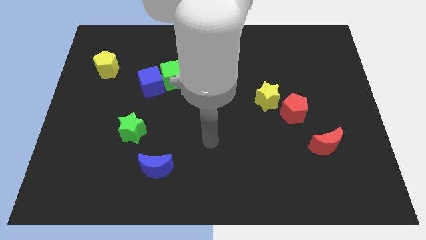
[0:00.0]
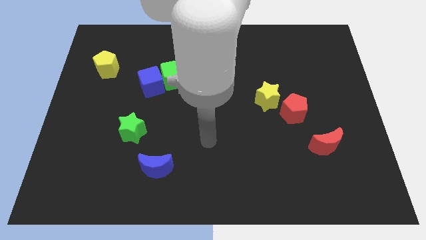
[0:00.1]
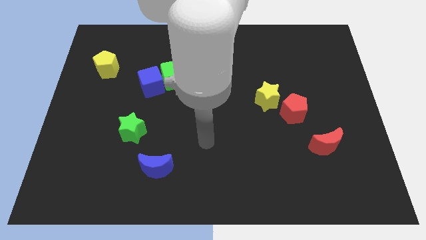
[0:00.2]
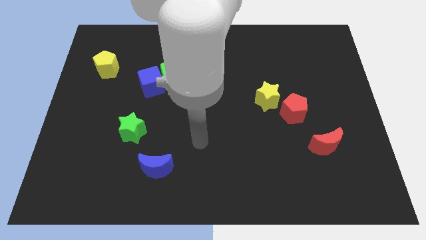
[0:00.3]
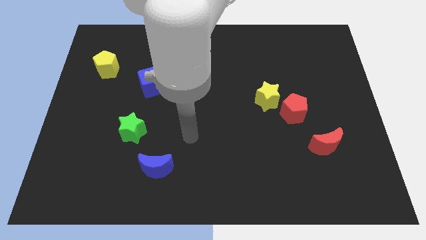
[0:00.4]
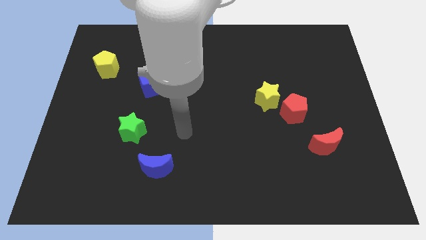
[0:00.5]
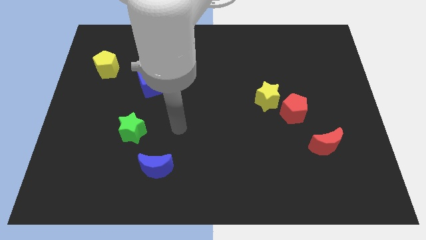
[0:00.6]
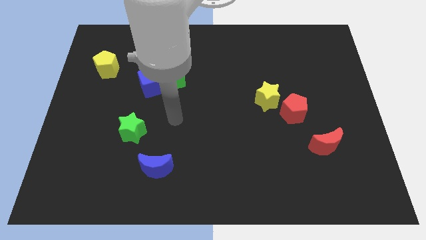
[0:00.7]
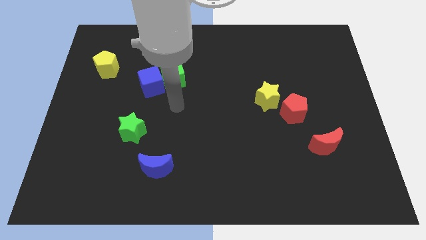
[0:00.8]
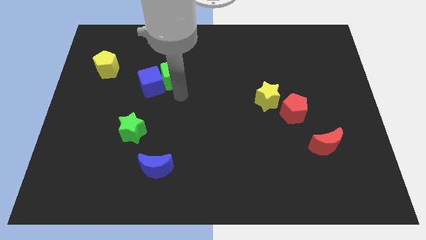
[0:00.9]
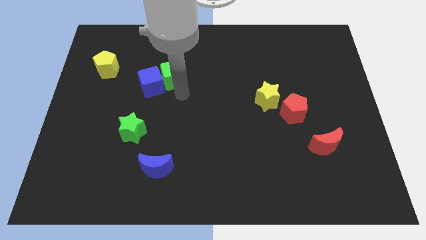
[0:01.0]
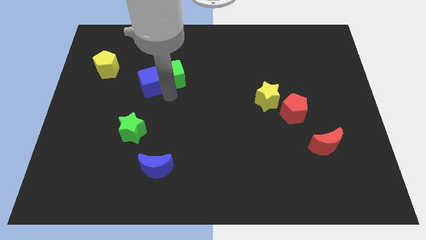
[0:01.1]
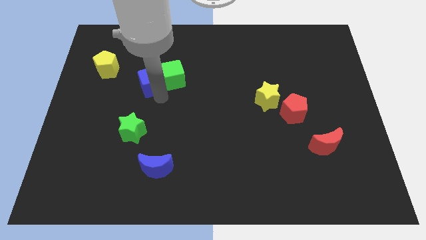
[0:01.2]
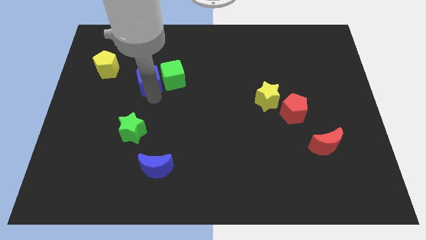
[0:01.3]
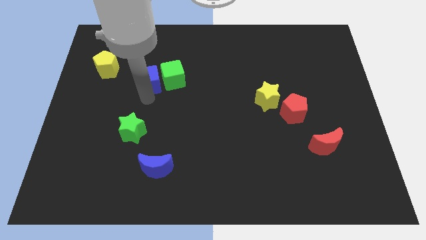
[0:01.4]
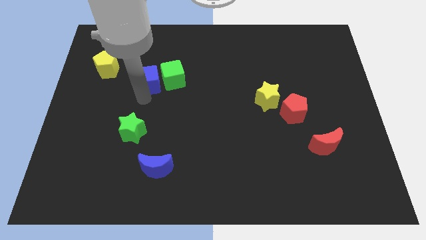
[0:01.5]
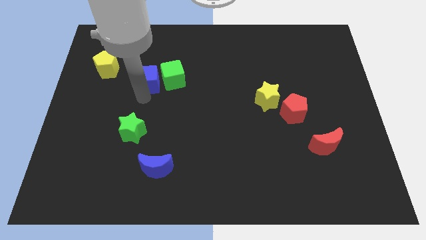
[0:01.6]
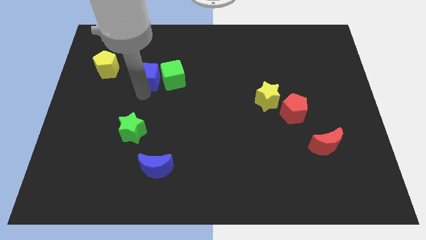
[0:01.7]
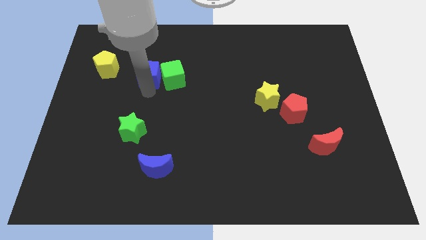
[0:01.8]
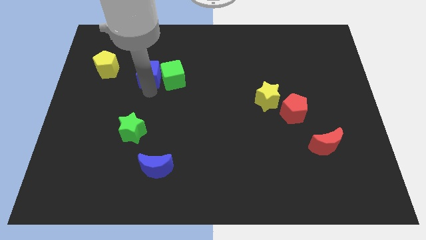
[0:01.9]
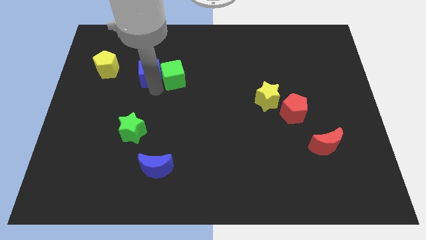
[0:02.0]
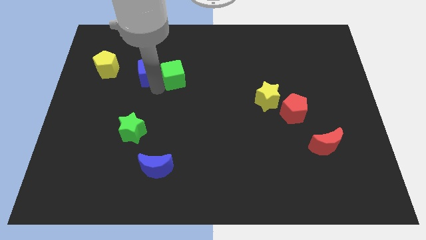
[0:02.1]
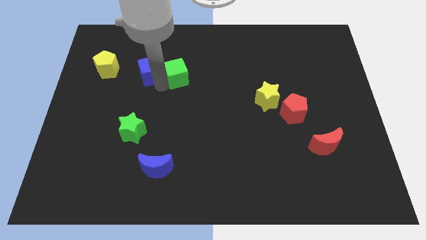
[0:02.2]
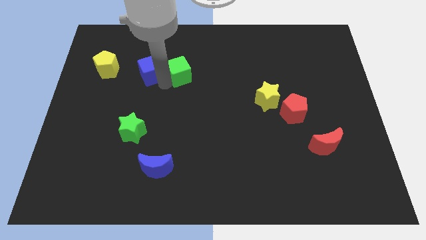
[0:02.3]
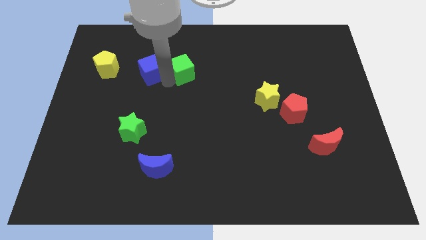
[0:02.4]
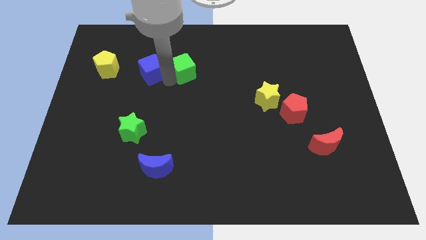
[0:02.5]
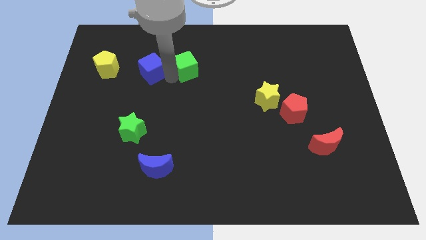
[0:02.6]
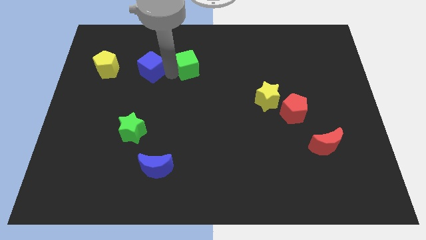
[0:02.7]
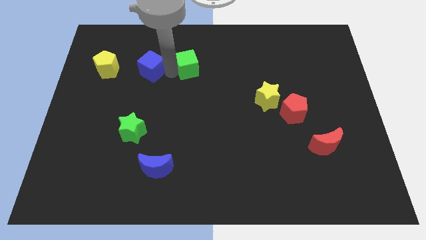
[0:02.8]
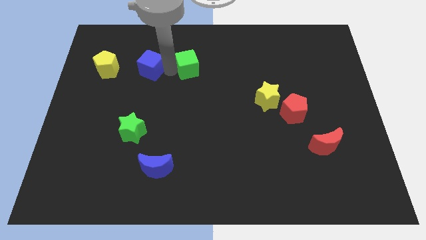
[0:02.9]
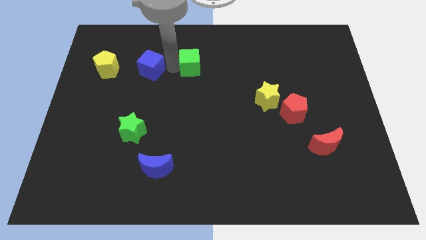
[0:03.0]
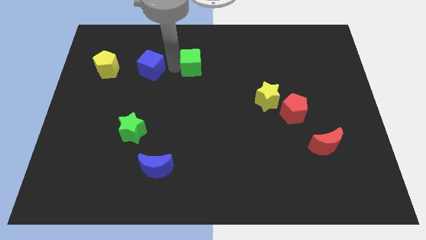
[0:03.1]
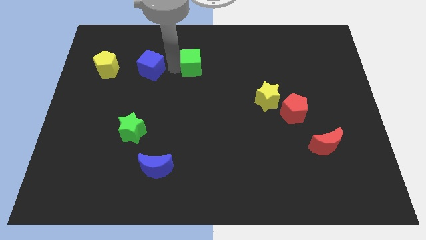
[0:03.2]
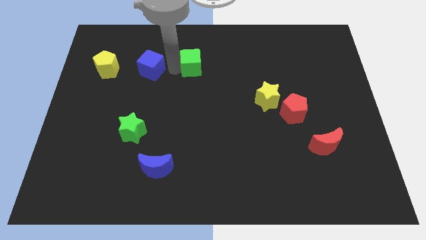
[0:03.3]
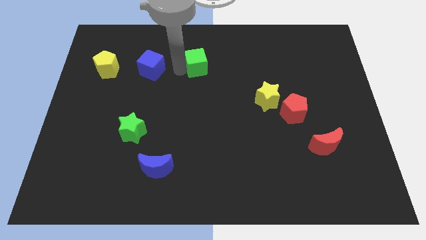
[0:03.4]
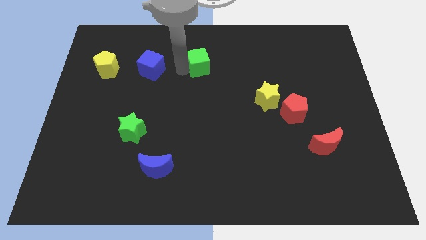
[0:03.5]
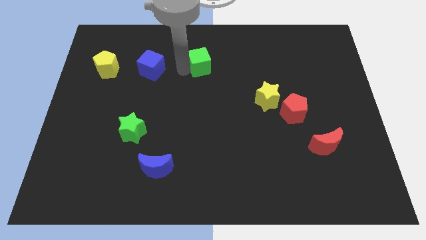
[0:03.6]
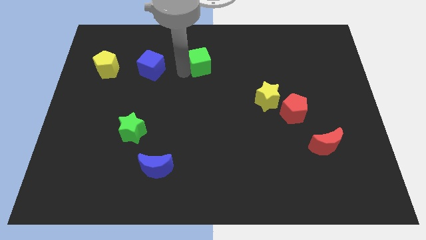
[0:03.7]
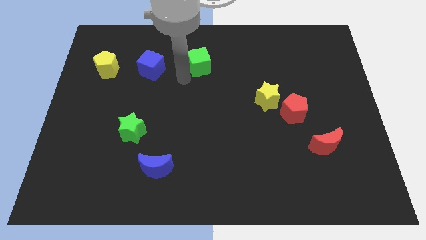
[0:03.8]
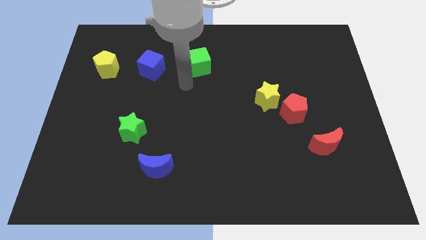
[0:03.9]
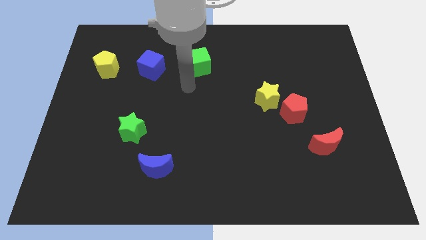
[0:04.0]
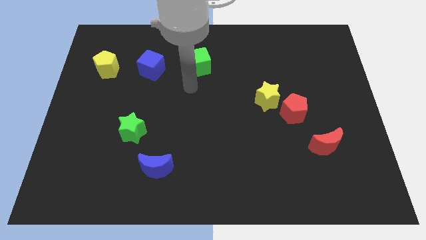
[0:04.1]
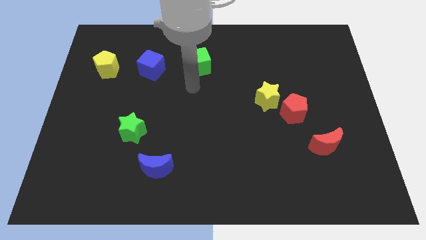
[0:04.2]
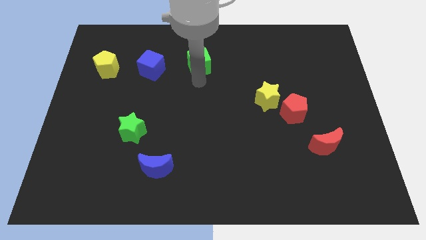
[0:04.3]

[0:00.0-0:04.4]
put the yellow pentagon blue cube and green cube in a line horizontally

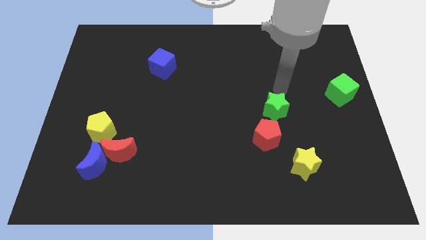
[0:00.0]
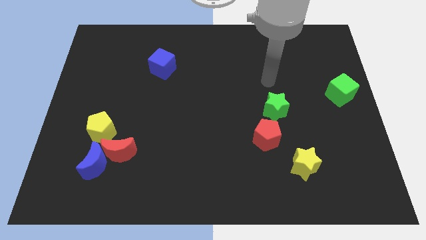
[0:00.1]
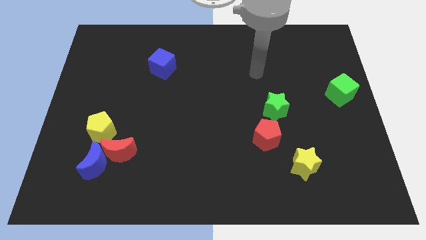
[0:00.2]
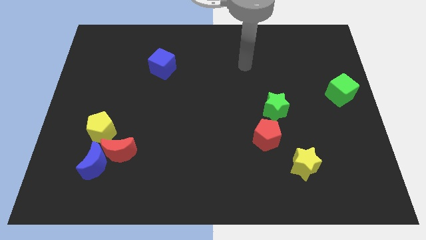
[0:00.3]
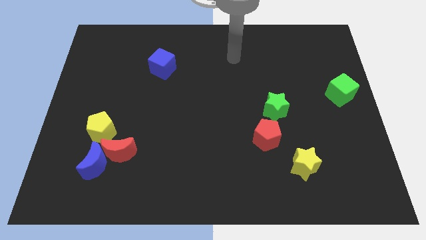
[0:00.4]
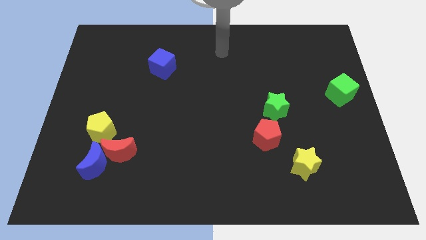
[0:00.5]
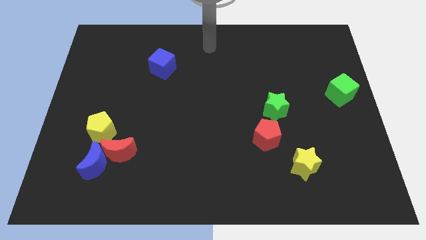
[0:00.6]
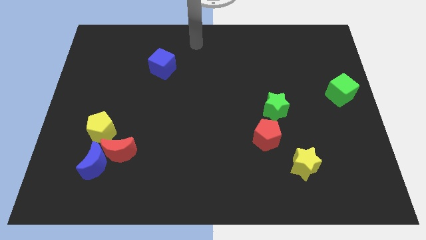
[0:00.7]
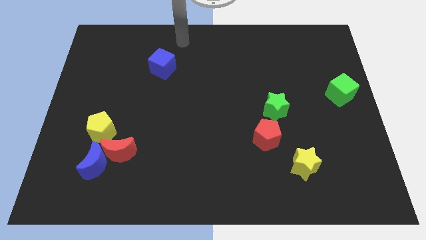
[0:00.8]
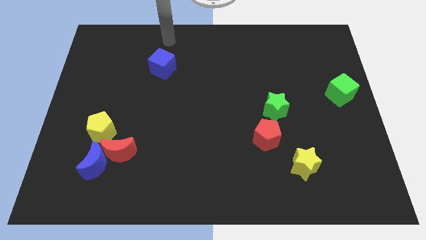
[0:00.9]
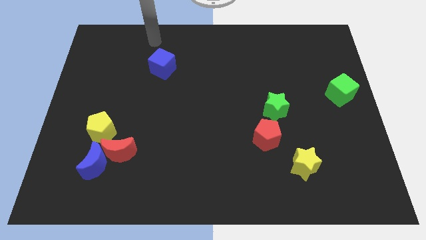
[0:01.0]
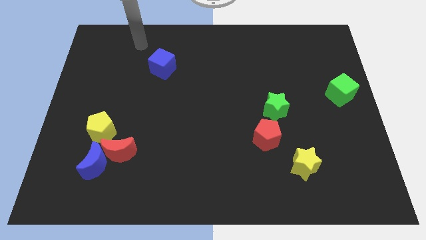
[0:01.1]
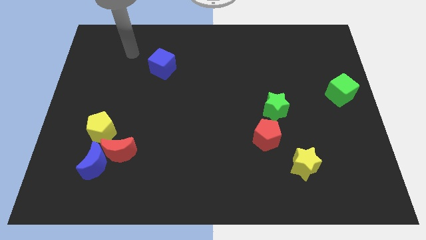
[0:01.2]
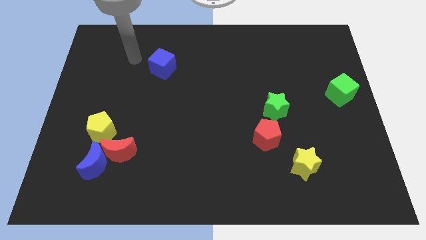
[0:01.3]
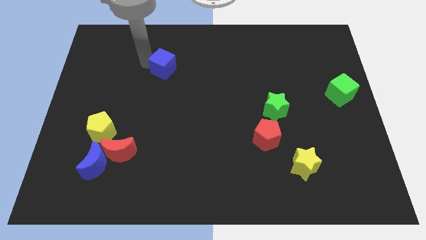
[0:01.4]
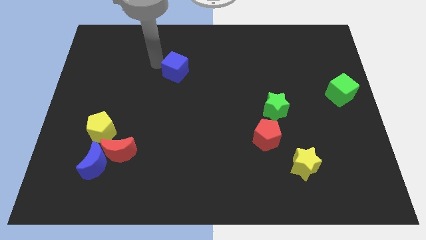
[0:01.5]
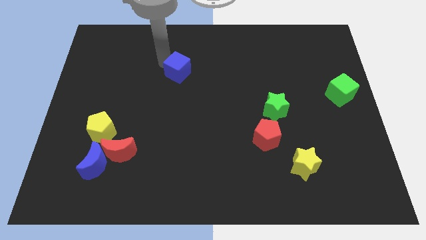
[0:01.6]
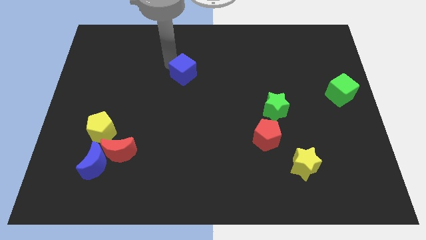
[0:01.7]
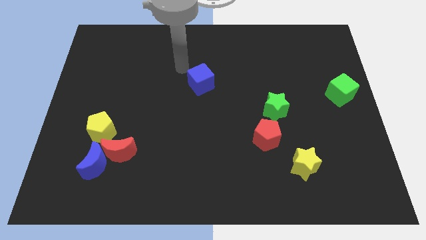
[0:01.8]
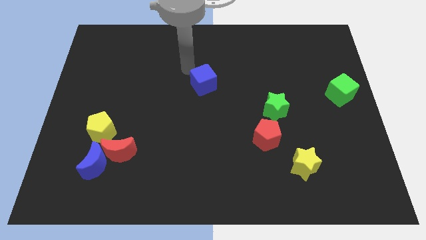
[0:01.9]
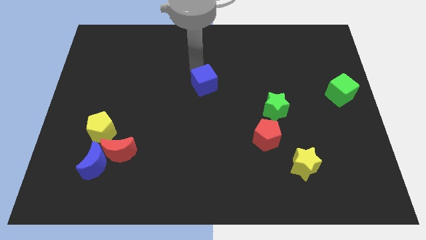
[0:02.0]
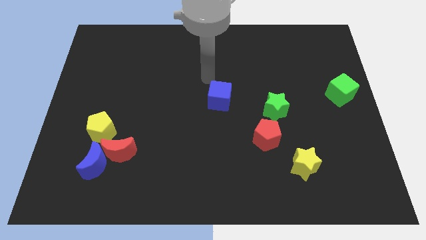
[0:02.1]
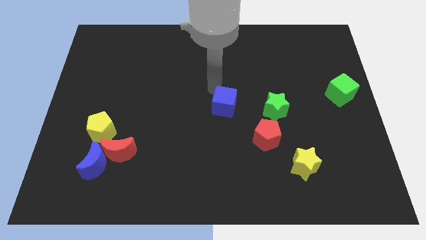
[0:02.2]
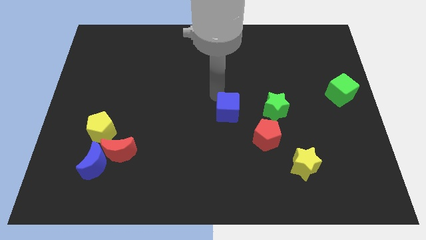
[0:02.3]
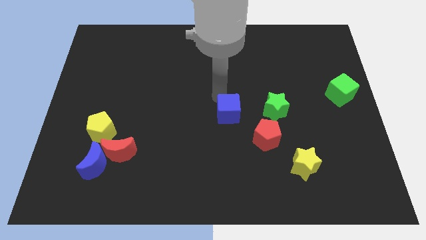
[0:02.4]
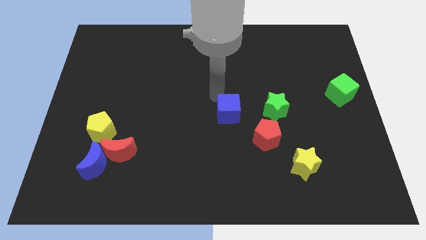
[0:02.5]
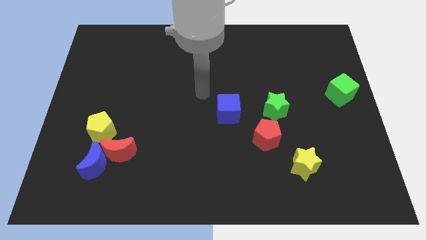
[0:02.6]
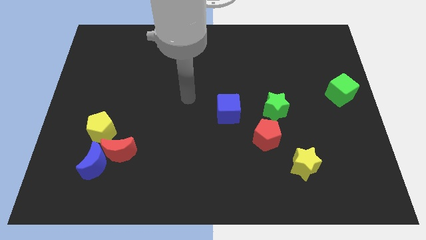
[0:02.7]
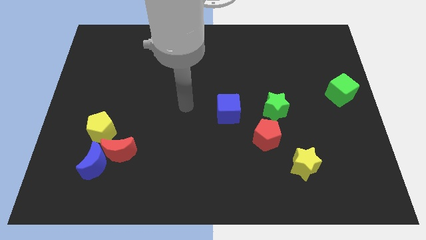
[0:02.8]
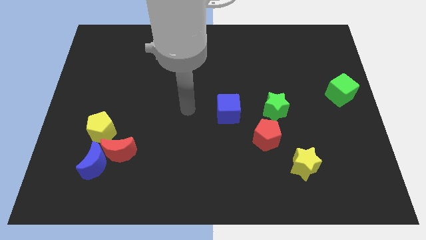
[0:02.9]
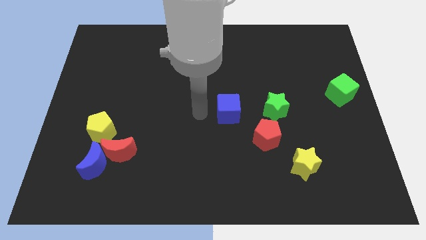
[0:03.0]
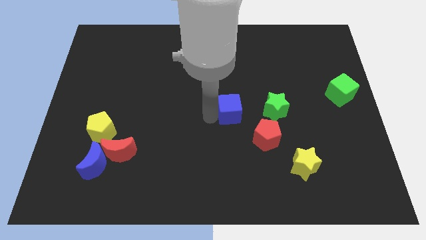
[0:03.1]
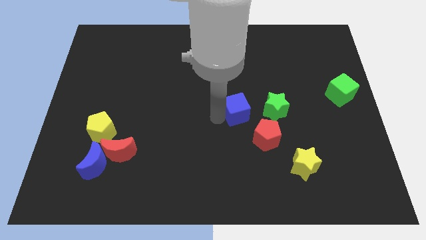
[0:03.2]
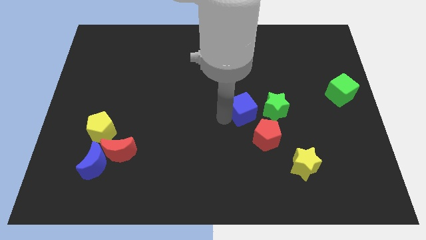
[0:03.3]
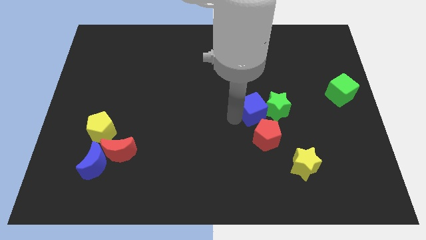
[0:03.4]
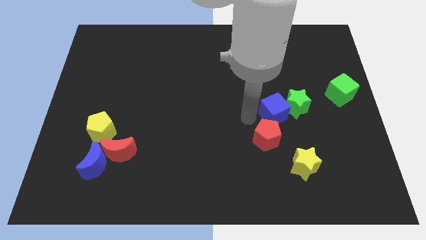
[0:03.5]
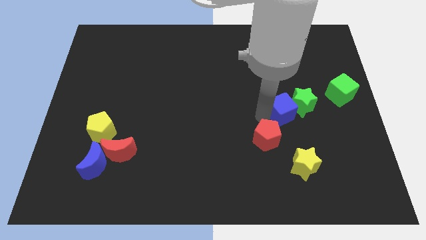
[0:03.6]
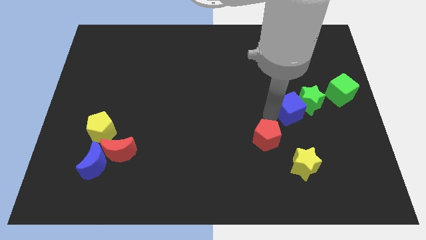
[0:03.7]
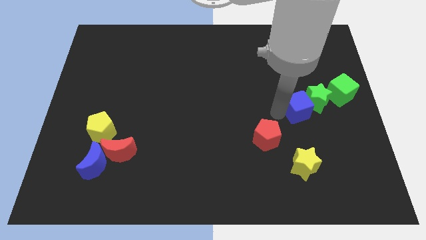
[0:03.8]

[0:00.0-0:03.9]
slide the blue cube into the green star

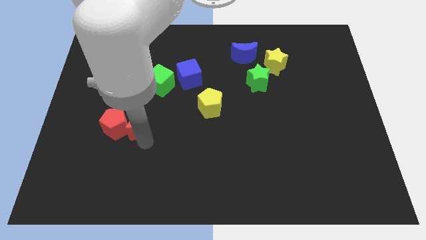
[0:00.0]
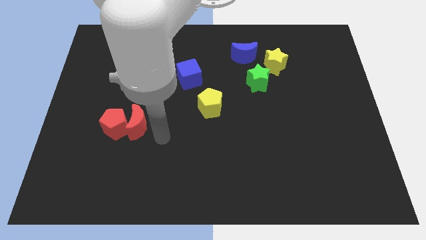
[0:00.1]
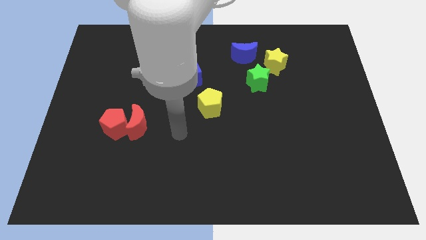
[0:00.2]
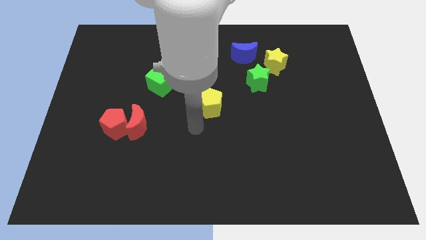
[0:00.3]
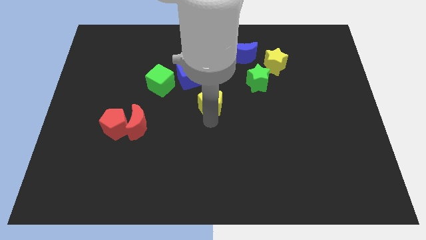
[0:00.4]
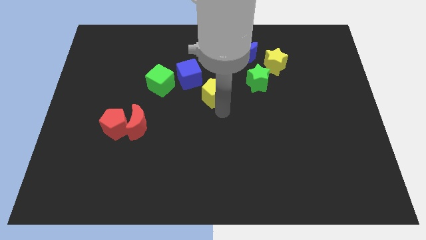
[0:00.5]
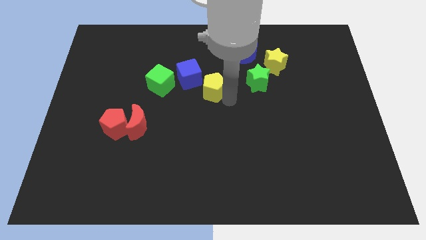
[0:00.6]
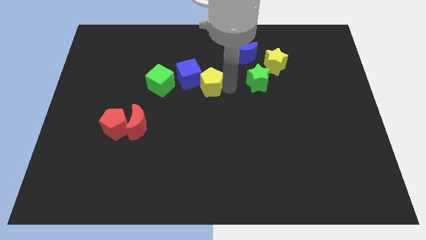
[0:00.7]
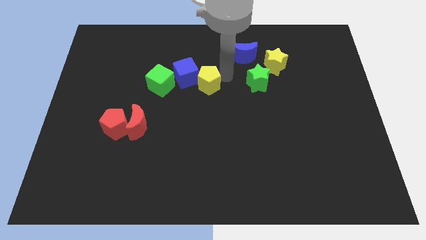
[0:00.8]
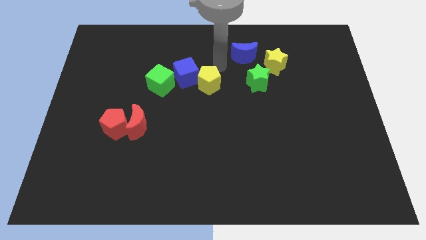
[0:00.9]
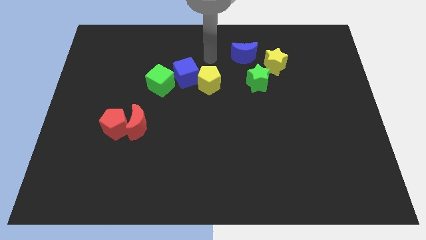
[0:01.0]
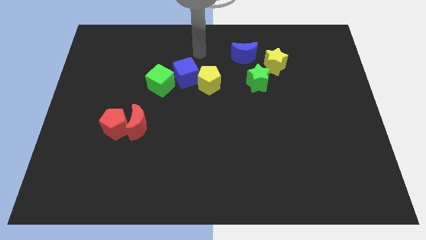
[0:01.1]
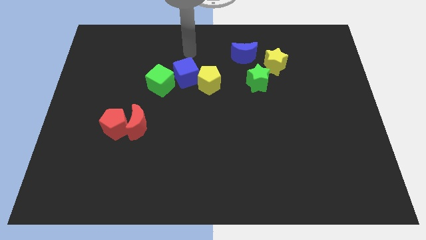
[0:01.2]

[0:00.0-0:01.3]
place yellow pentagon to the bottom right of blue cube
